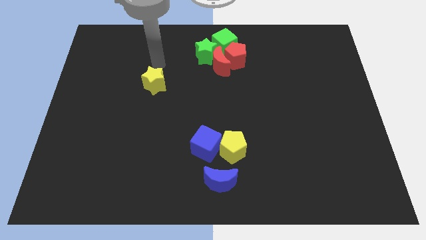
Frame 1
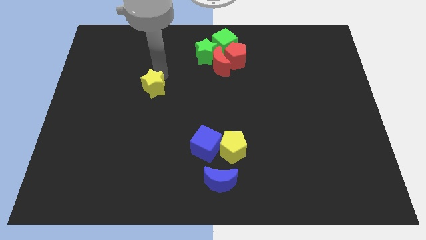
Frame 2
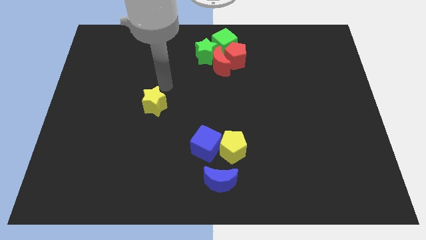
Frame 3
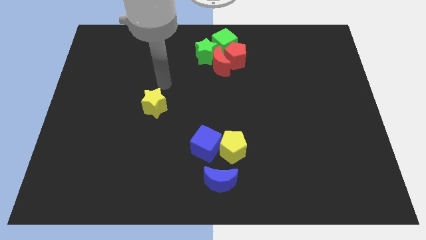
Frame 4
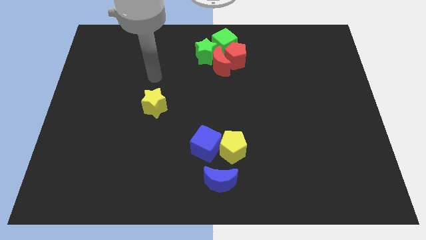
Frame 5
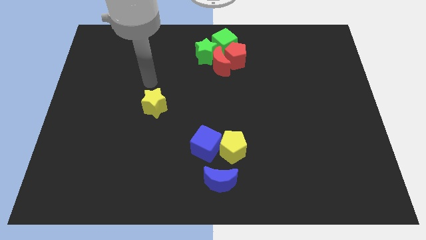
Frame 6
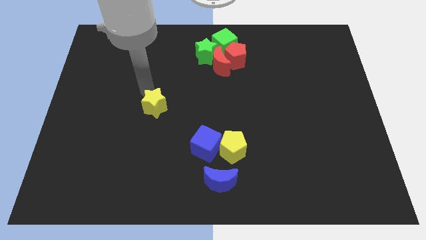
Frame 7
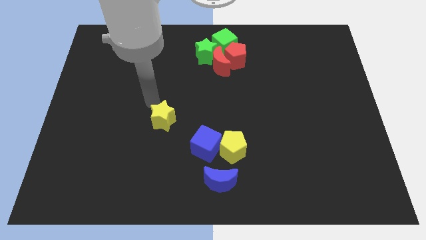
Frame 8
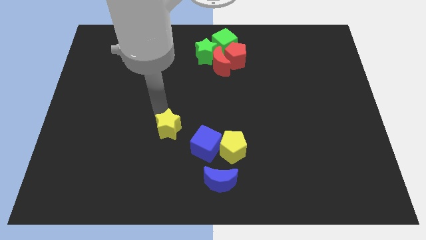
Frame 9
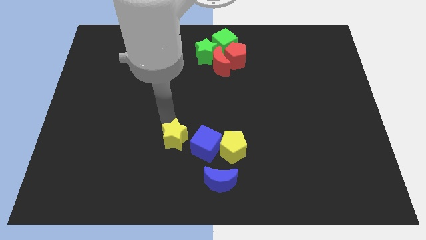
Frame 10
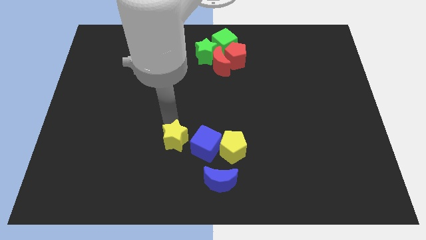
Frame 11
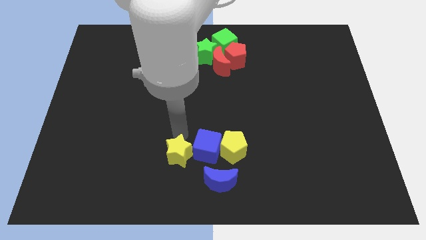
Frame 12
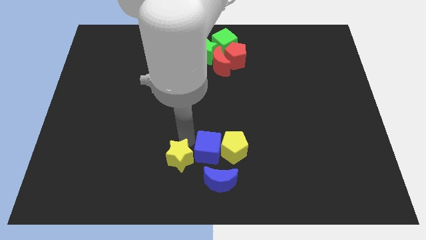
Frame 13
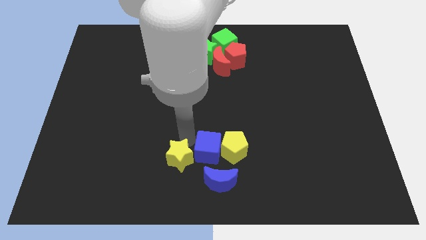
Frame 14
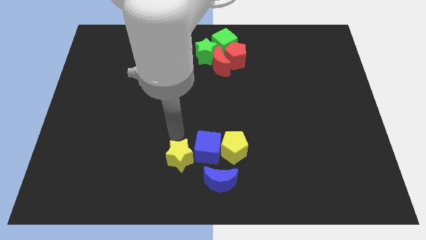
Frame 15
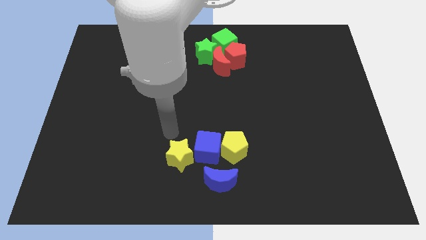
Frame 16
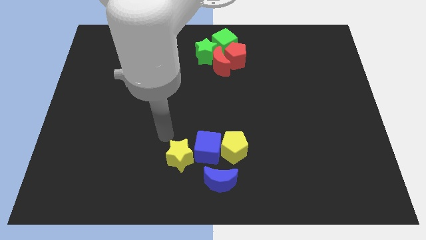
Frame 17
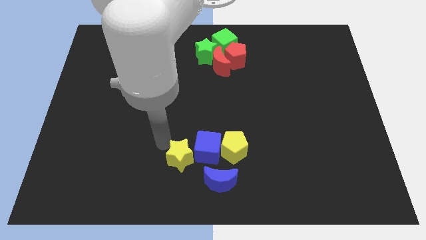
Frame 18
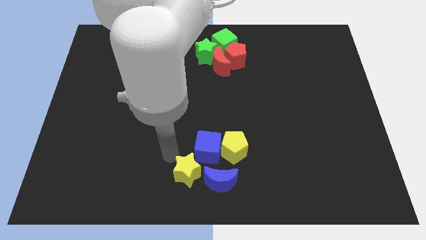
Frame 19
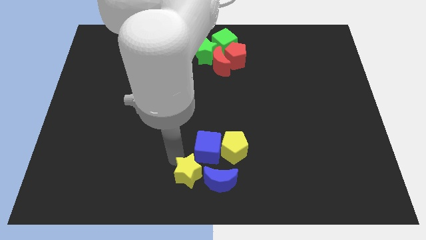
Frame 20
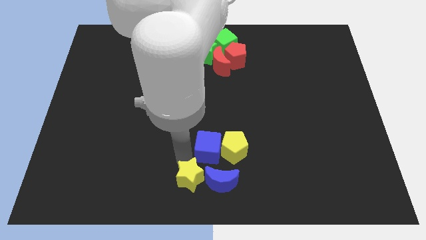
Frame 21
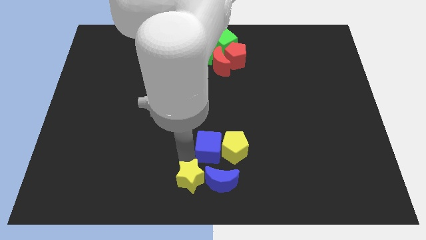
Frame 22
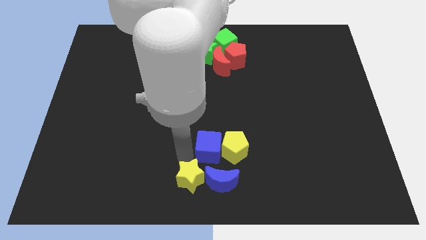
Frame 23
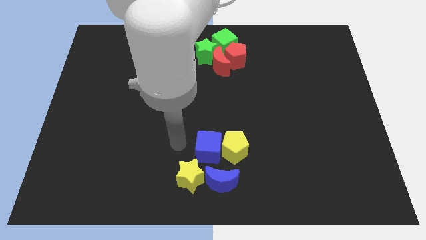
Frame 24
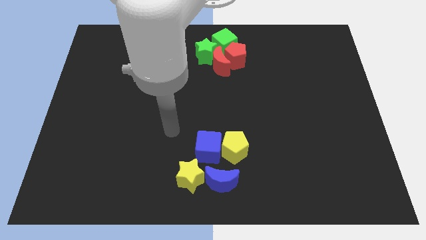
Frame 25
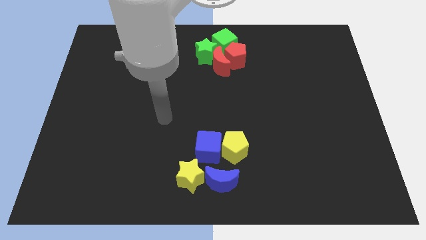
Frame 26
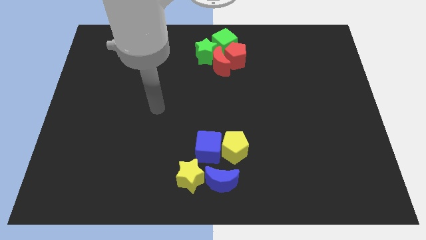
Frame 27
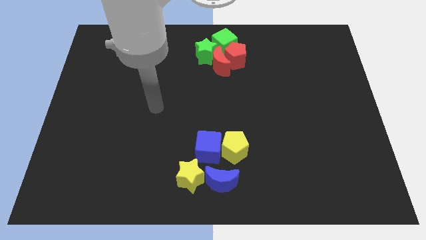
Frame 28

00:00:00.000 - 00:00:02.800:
push the yellow star down to the bottom center of the board

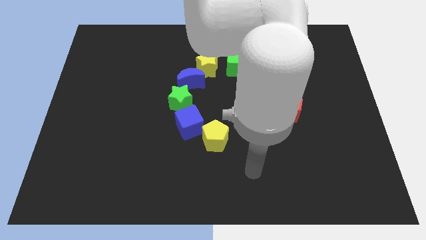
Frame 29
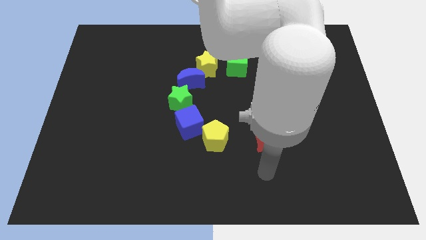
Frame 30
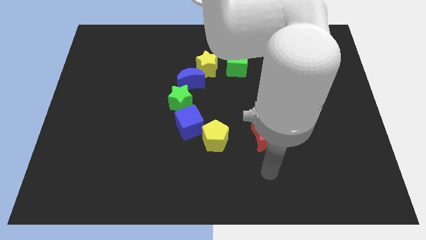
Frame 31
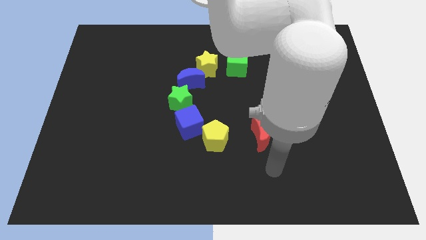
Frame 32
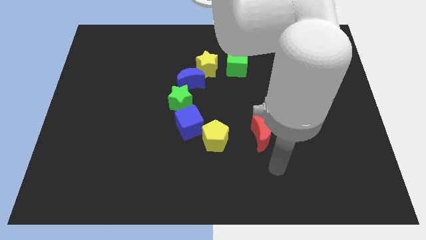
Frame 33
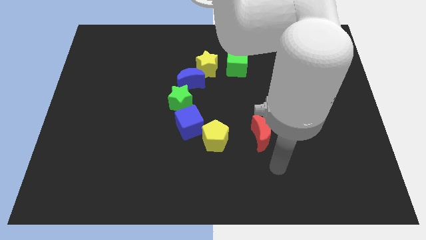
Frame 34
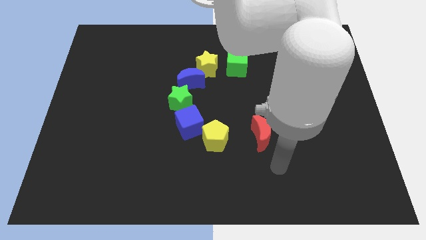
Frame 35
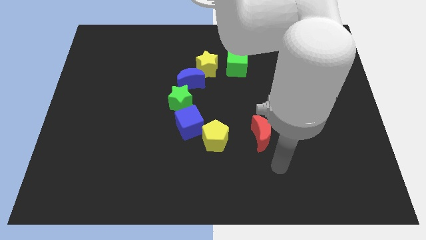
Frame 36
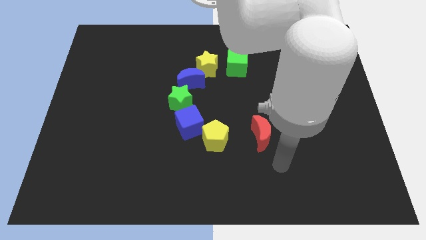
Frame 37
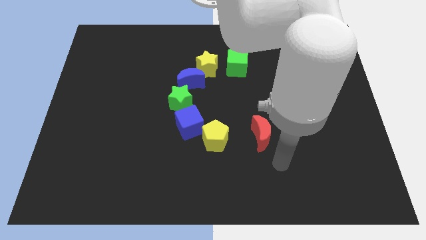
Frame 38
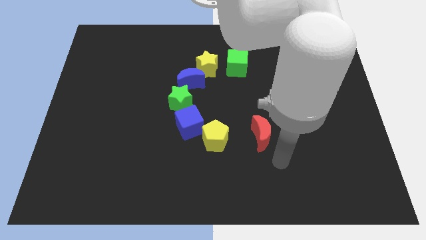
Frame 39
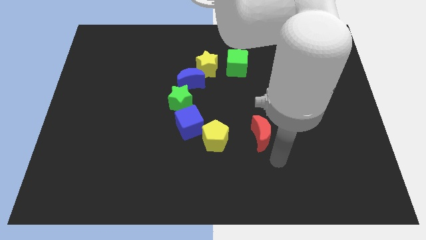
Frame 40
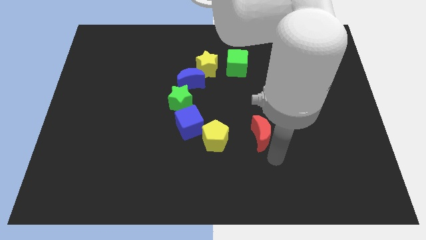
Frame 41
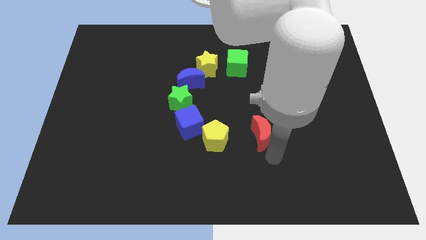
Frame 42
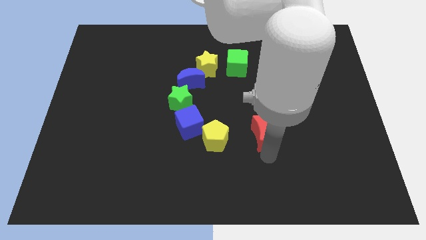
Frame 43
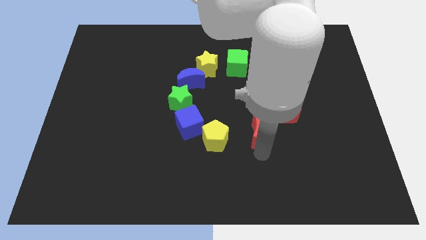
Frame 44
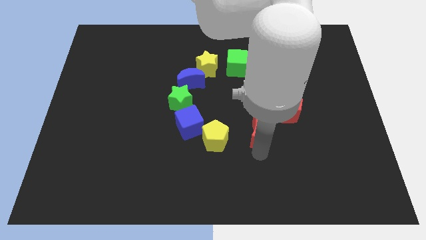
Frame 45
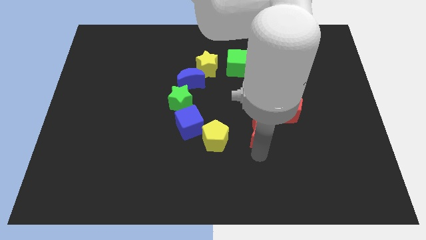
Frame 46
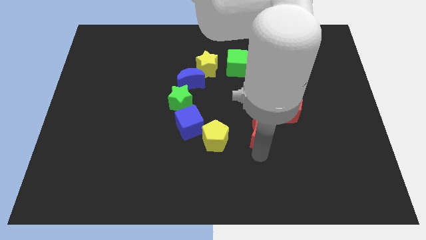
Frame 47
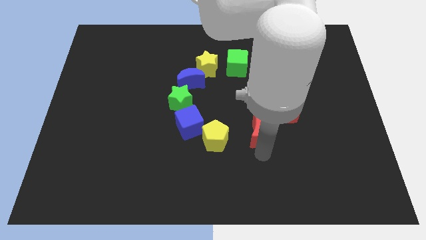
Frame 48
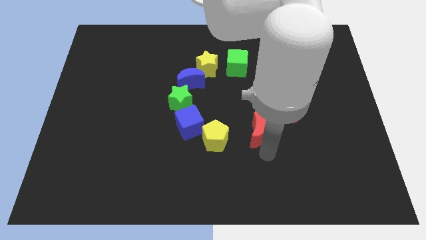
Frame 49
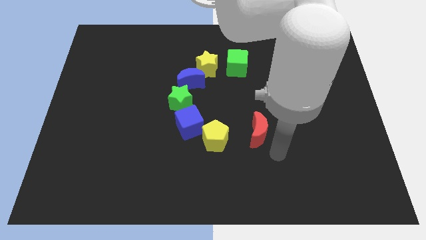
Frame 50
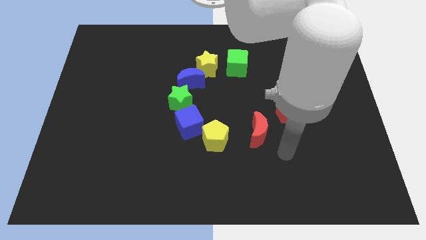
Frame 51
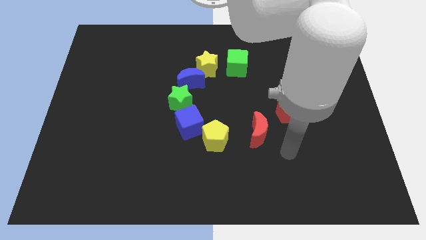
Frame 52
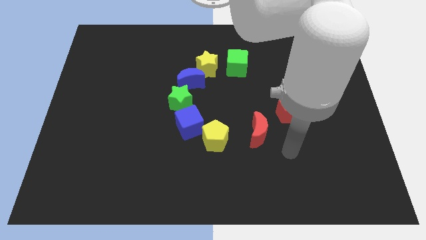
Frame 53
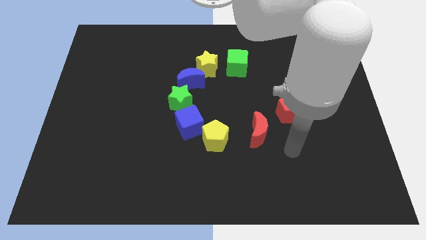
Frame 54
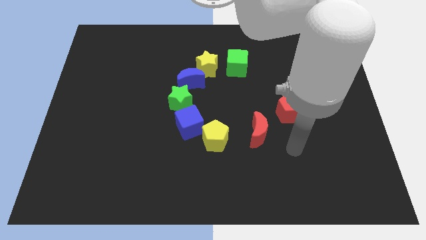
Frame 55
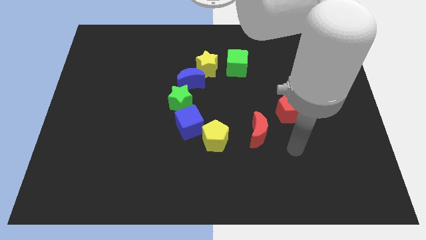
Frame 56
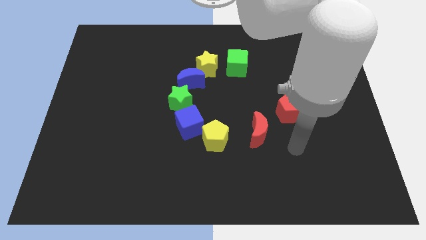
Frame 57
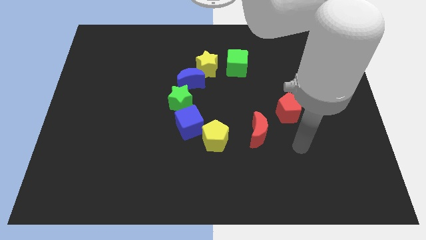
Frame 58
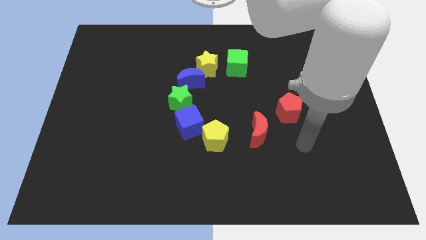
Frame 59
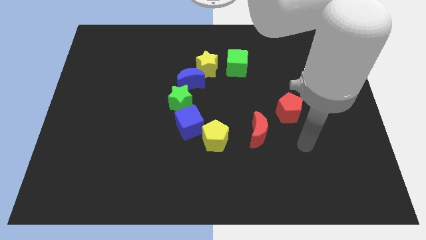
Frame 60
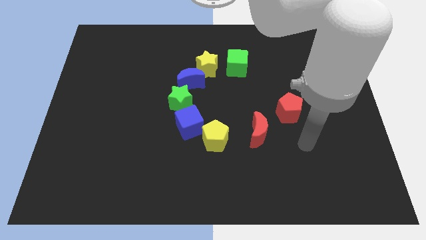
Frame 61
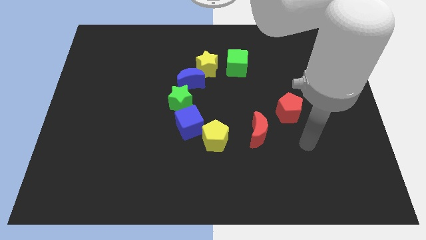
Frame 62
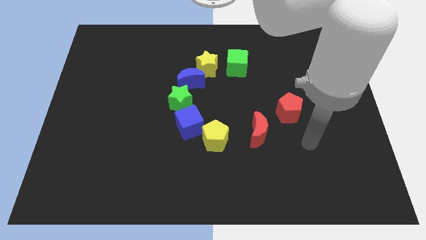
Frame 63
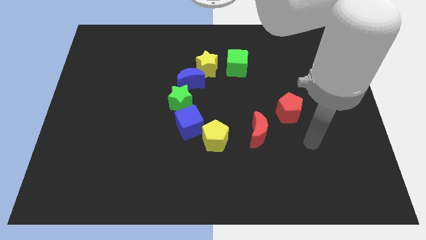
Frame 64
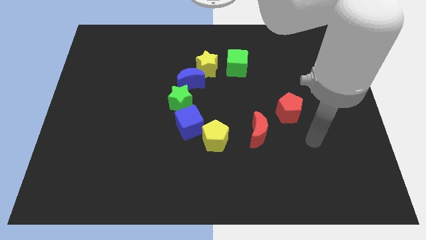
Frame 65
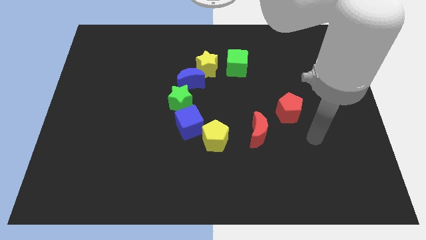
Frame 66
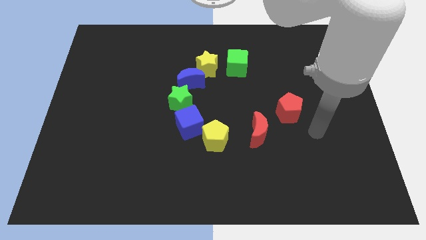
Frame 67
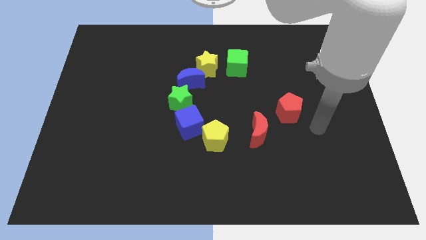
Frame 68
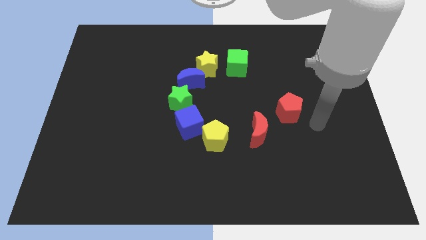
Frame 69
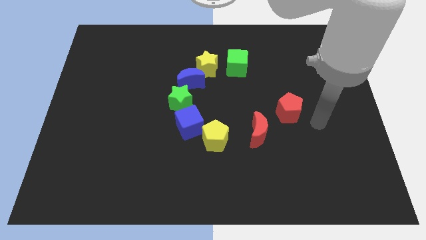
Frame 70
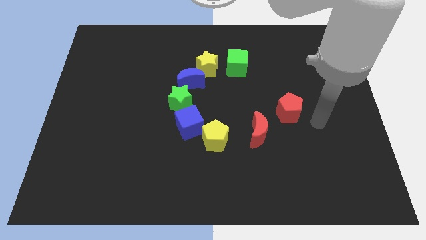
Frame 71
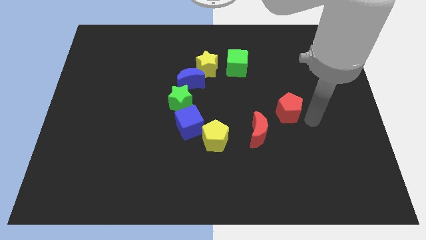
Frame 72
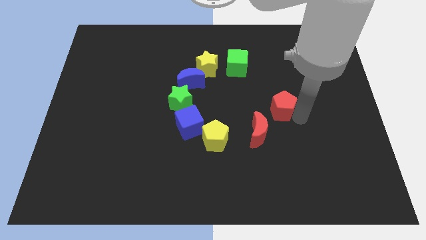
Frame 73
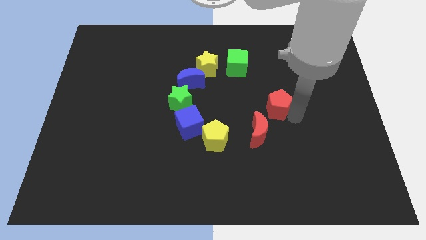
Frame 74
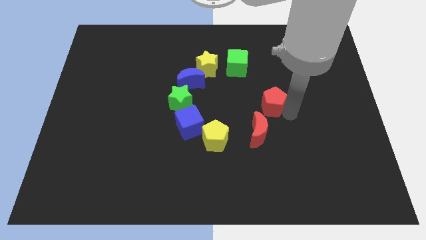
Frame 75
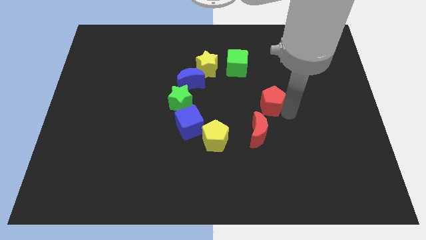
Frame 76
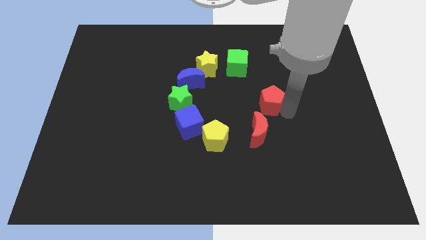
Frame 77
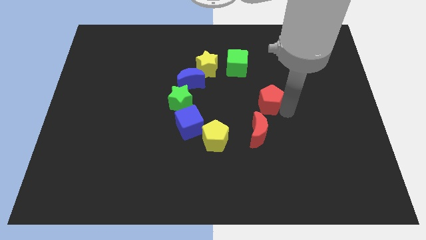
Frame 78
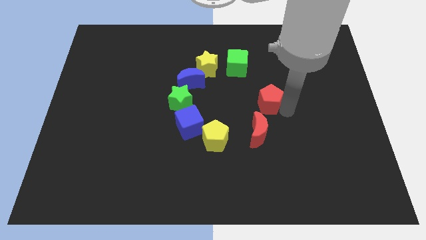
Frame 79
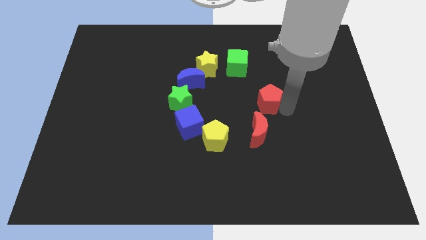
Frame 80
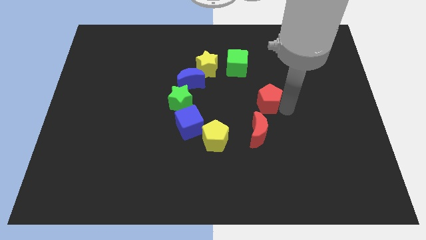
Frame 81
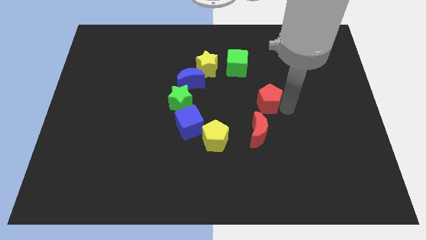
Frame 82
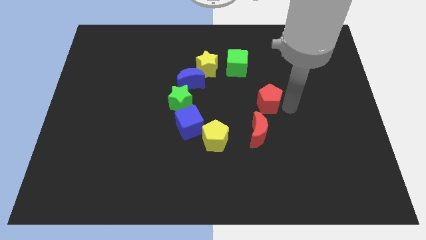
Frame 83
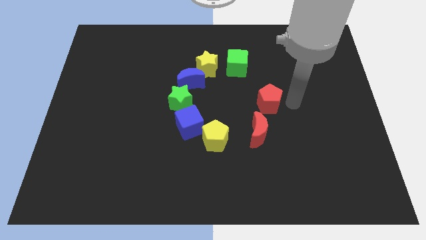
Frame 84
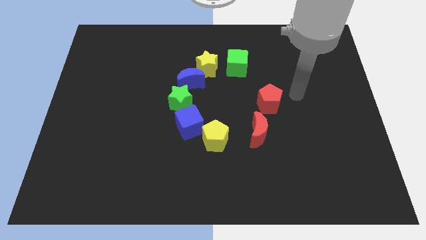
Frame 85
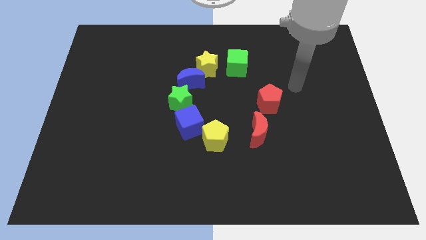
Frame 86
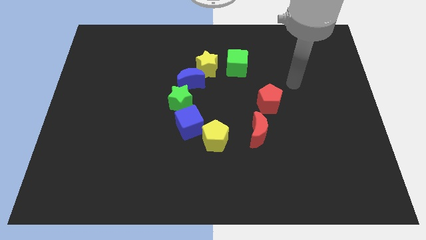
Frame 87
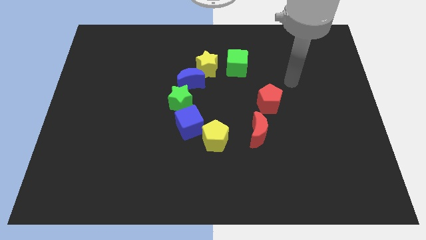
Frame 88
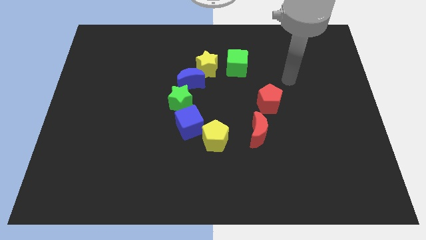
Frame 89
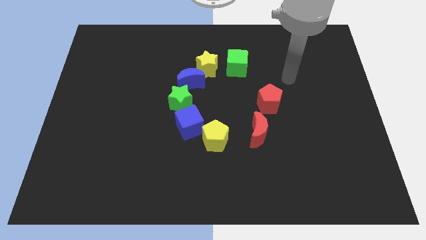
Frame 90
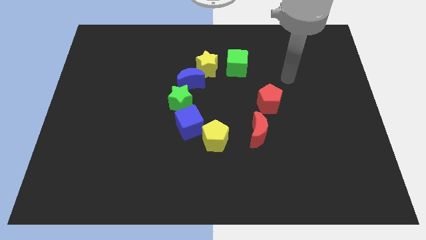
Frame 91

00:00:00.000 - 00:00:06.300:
move the red blocks slightly to the left
